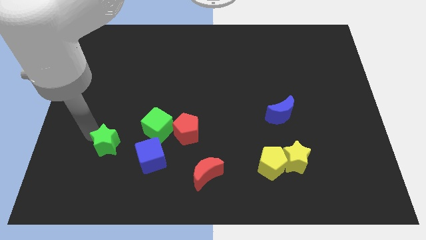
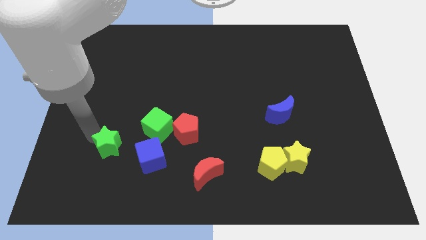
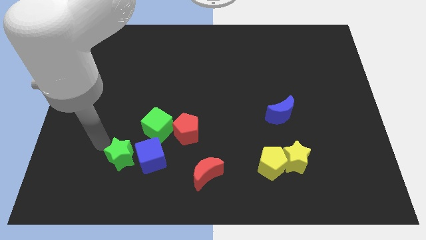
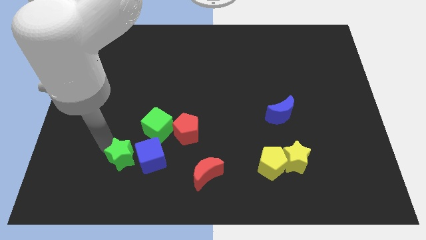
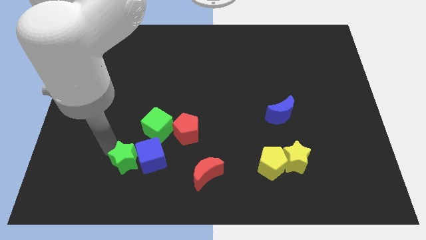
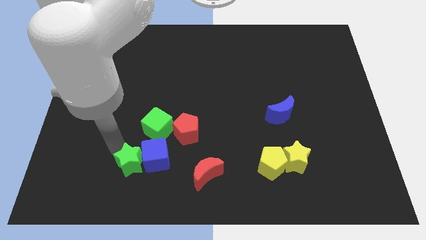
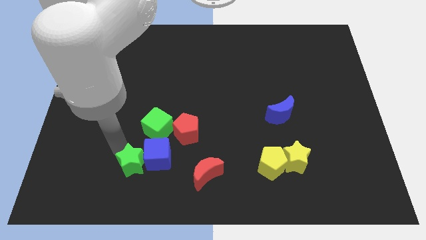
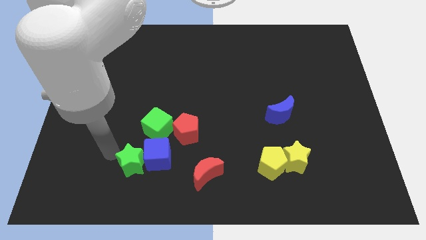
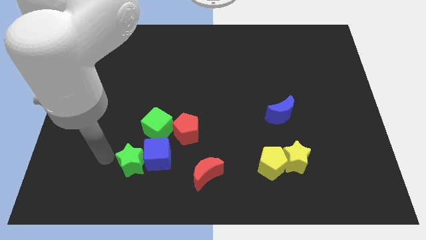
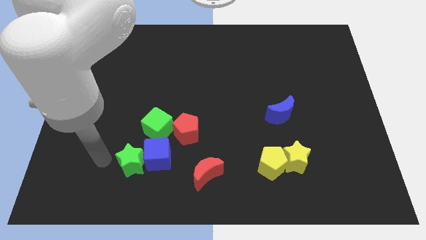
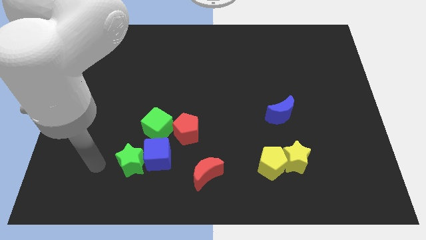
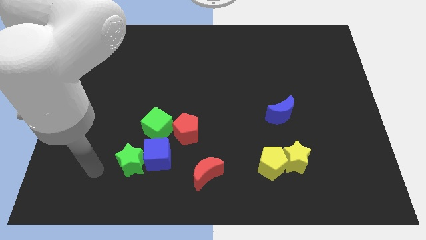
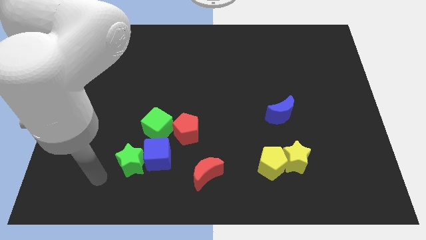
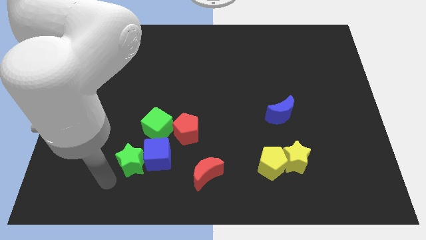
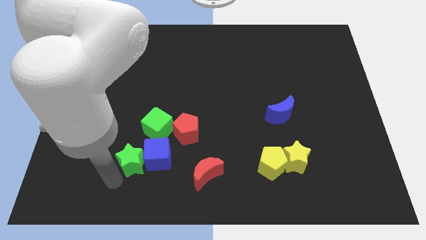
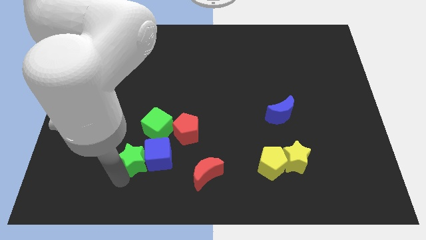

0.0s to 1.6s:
push the green star into the blue cube

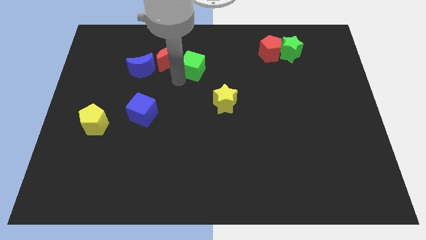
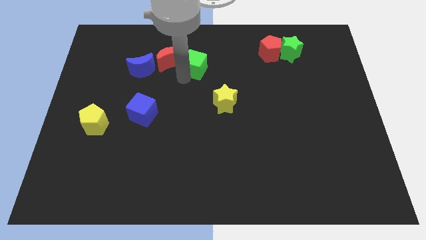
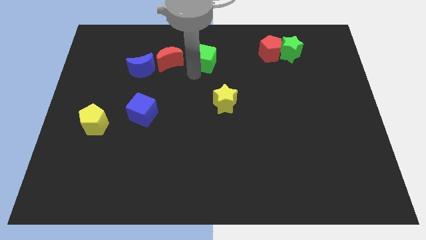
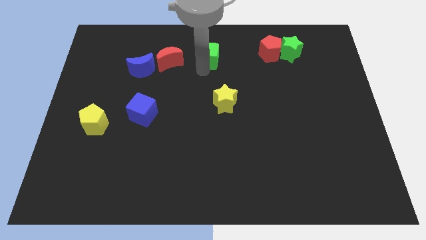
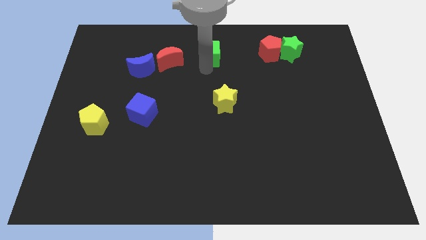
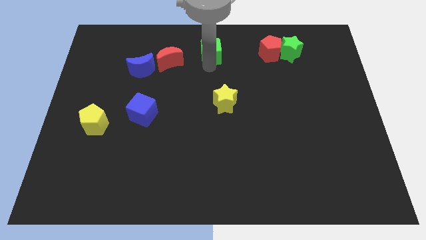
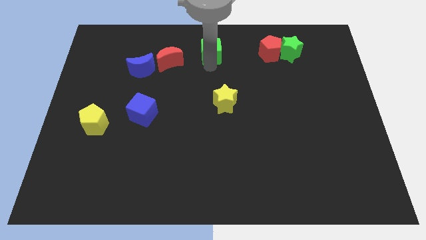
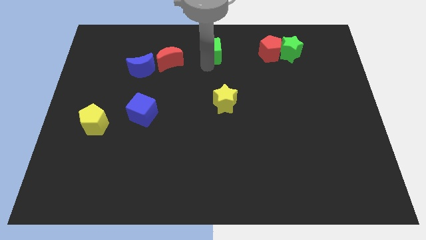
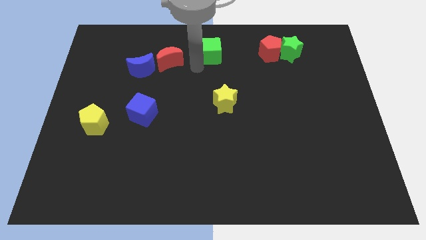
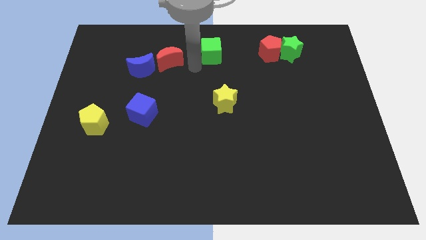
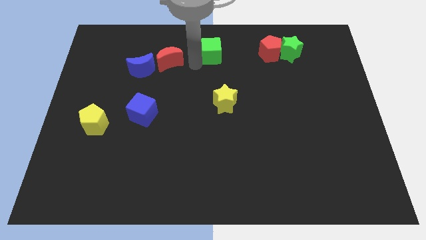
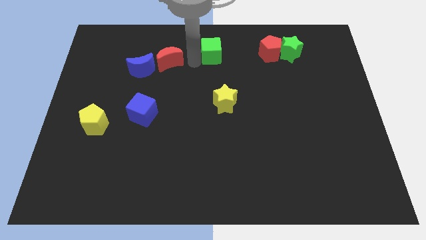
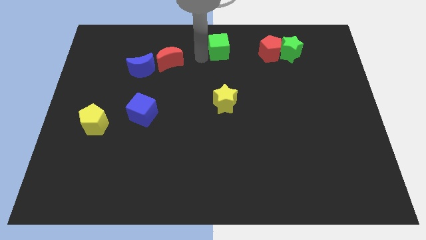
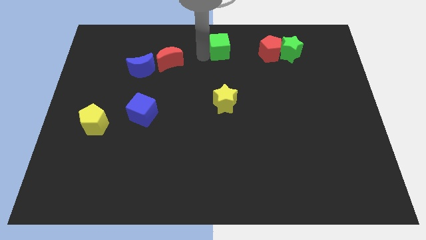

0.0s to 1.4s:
place the green cube vertically above the yellow star

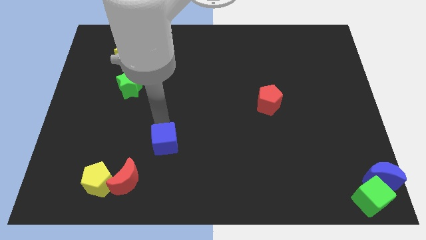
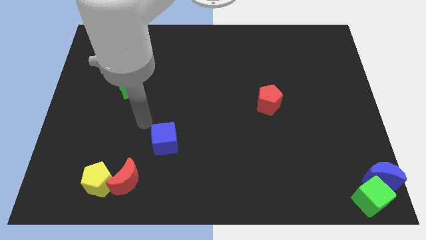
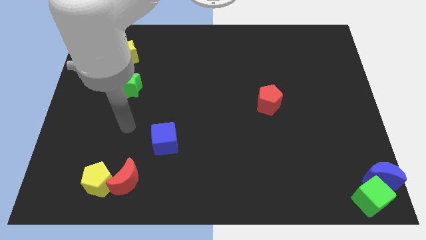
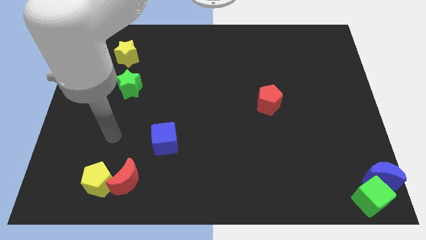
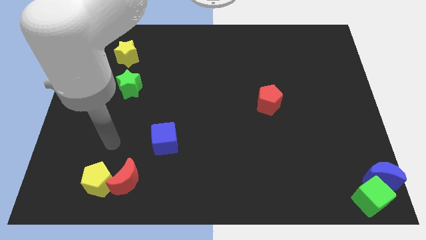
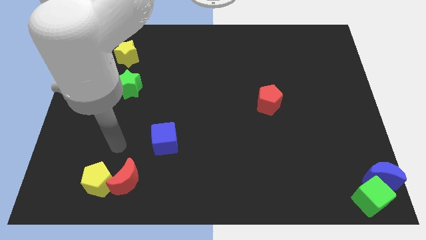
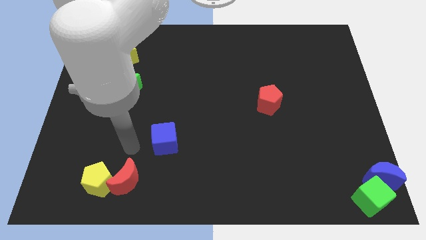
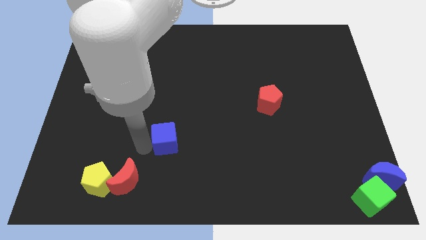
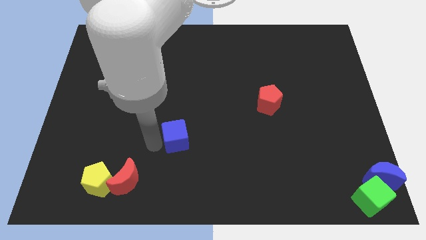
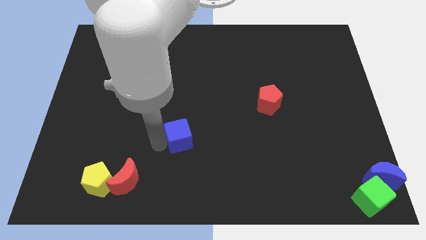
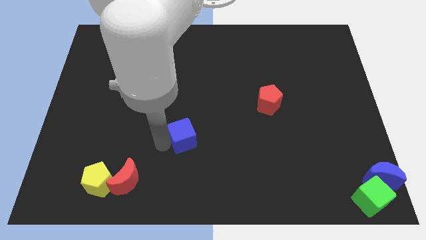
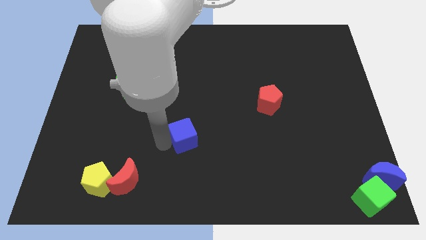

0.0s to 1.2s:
place blue cube slightly to the right

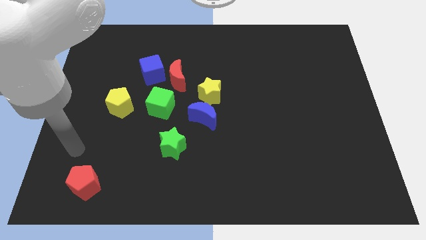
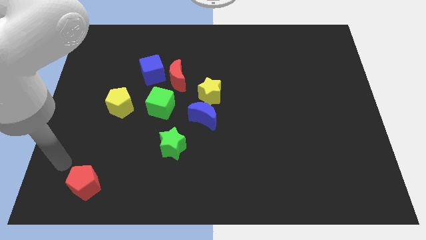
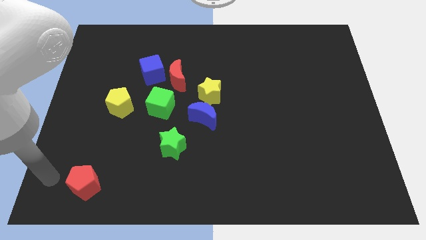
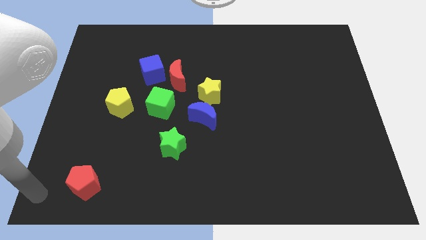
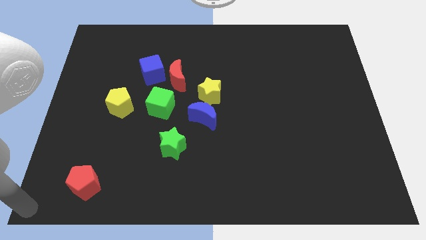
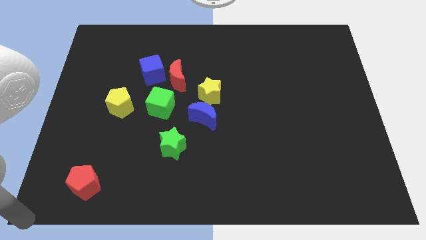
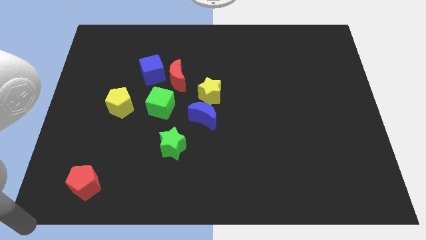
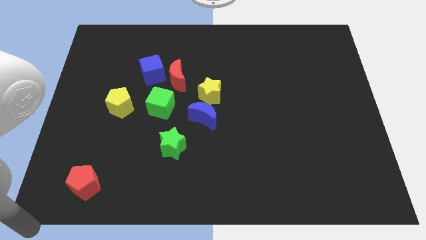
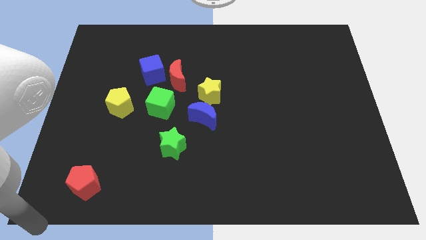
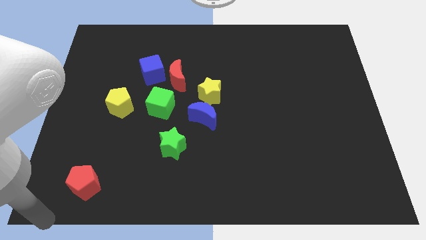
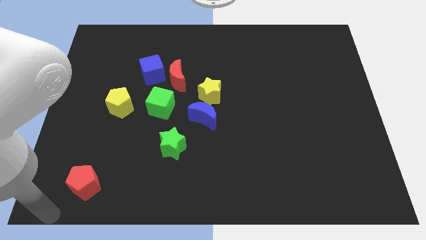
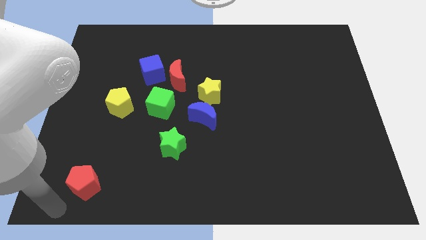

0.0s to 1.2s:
move your arm close to the red pentagon

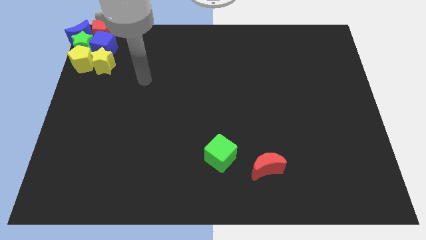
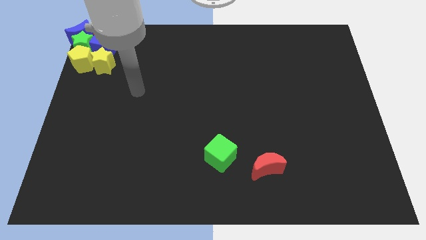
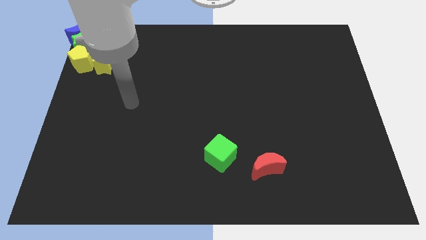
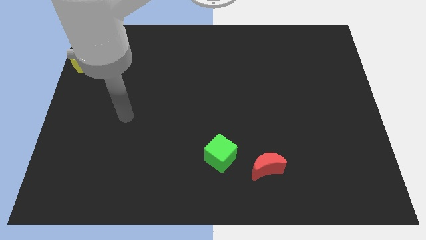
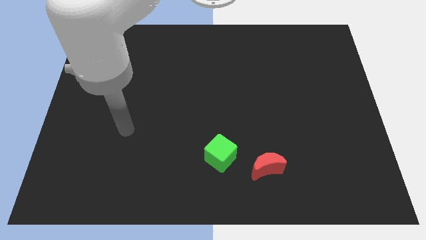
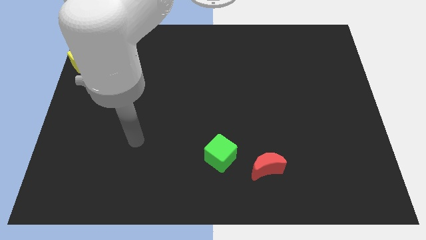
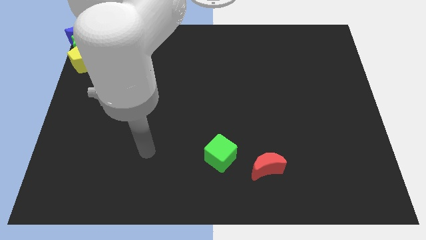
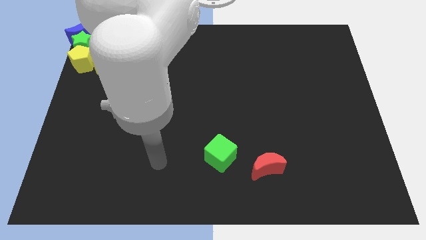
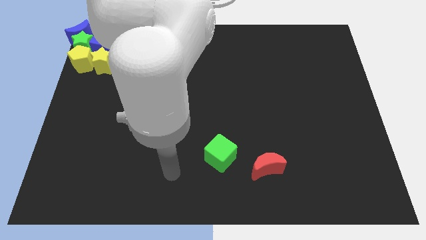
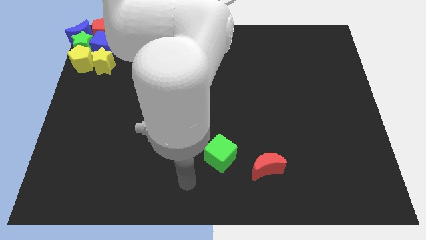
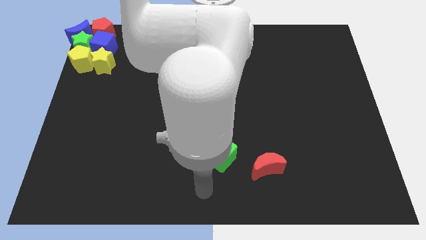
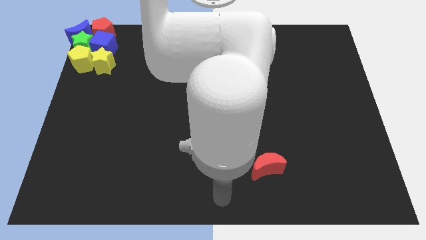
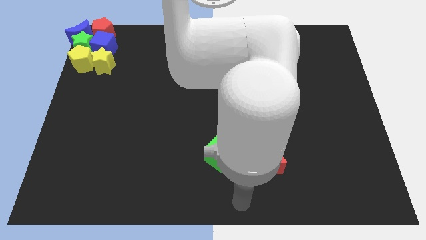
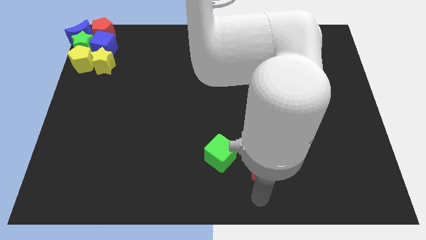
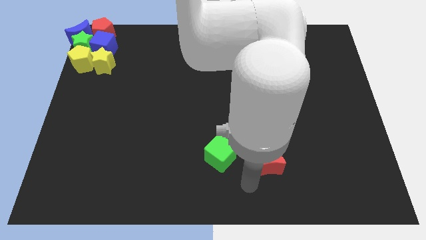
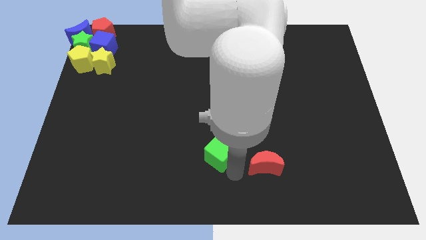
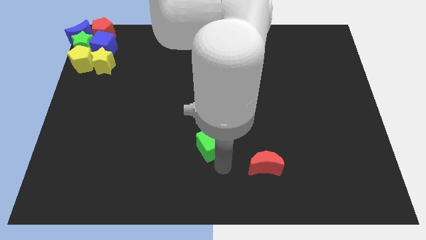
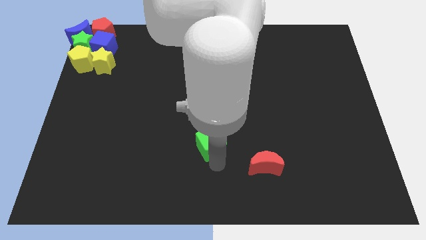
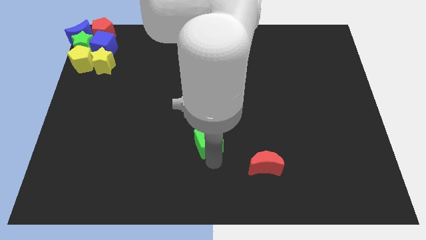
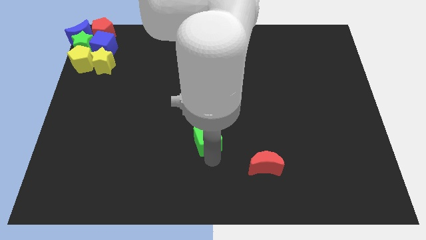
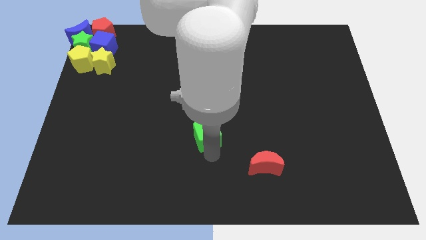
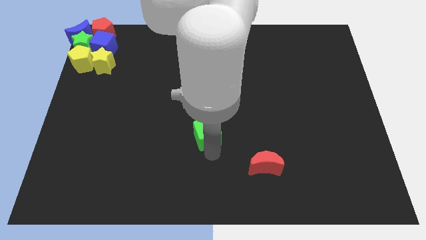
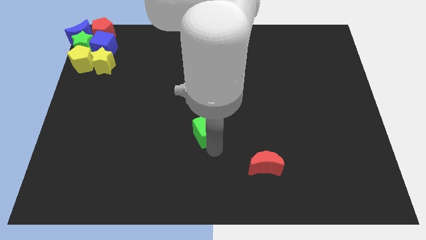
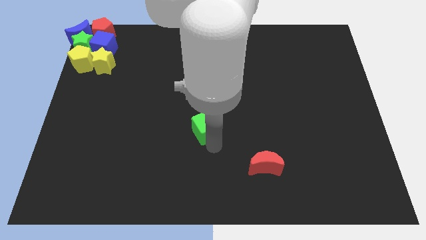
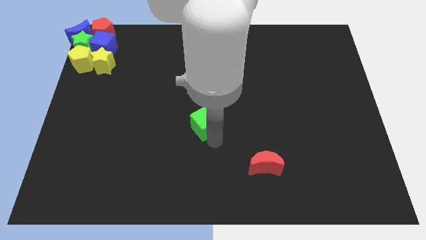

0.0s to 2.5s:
push the green cube to the center of the board

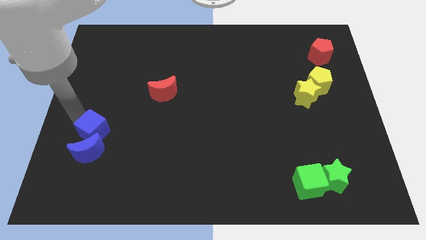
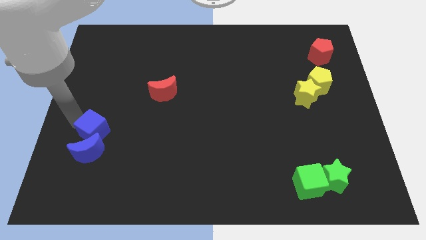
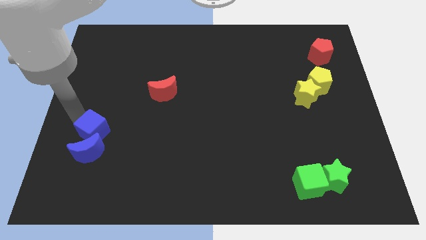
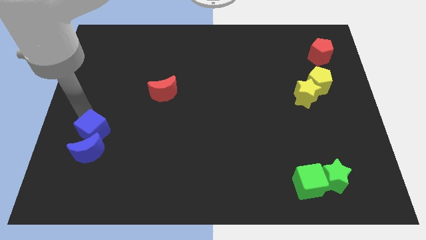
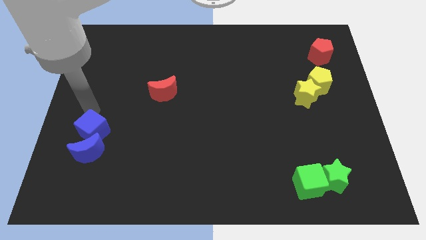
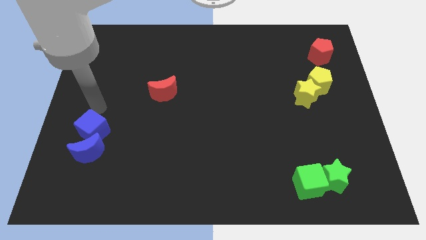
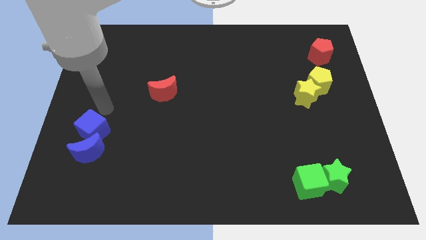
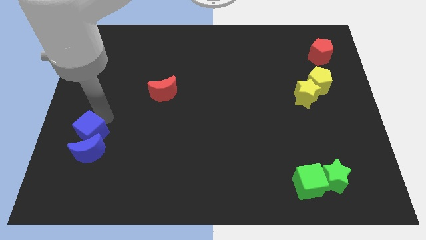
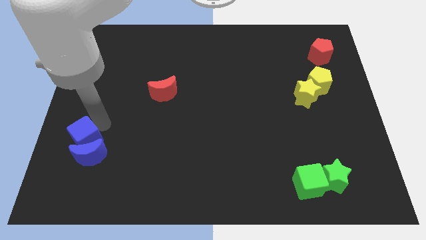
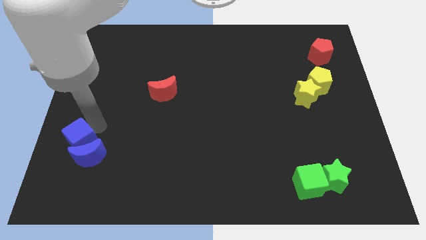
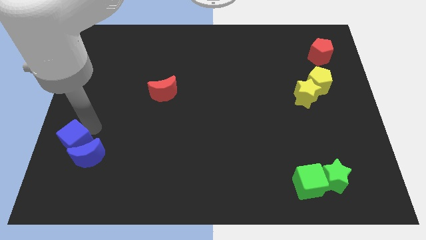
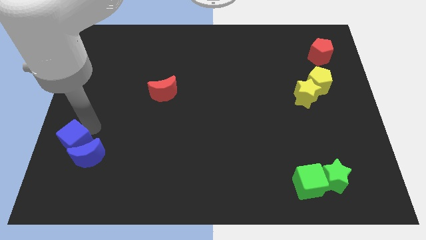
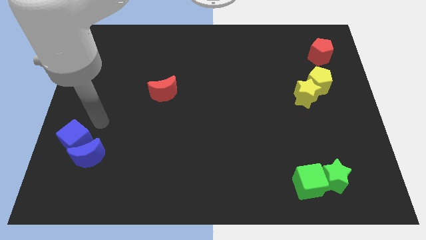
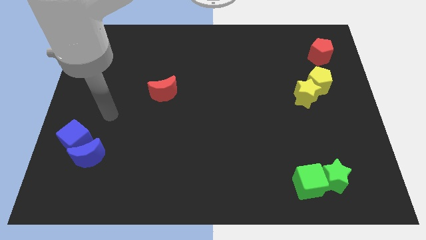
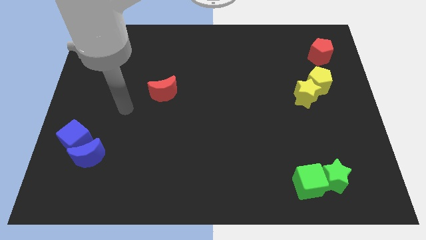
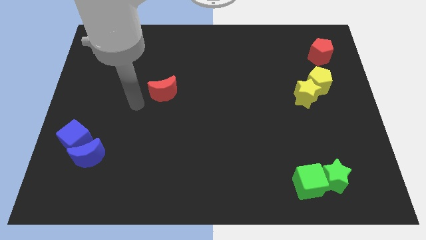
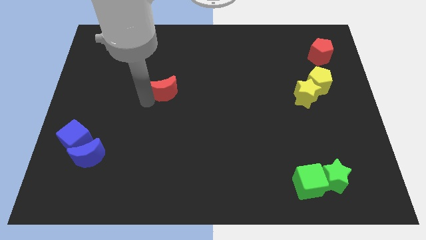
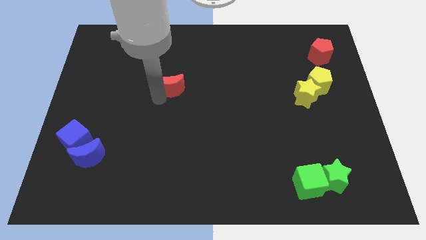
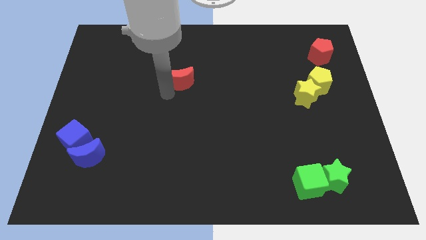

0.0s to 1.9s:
move your arm near to the red moon
